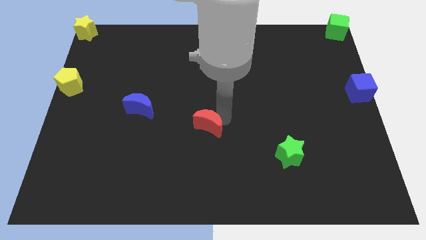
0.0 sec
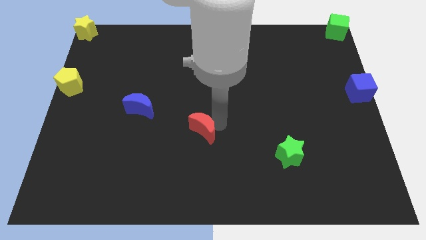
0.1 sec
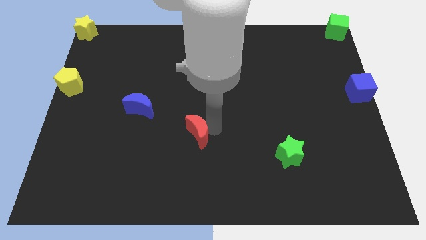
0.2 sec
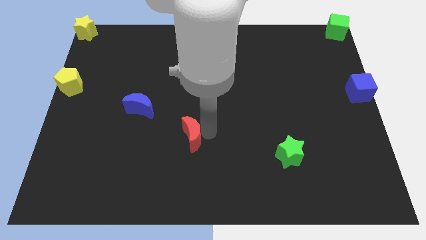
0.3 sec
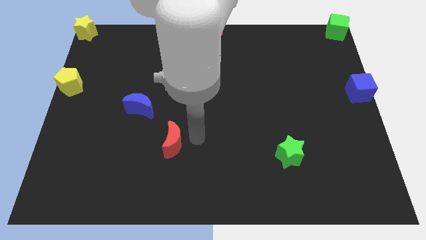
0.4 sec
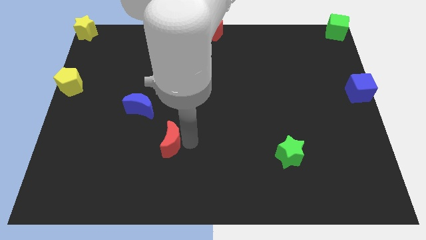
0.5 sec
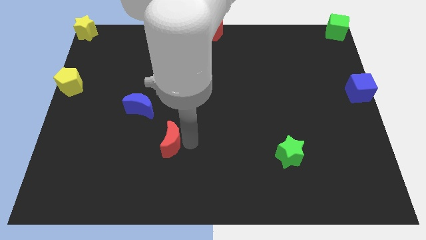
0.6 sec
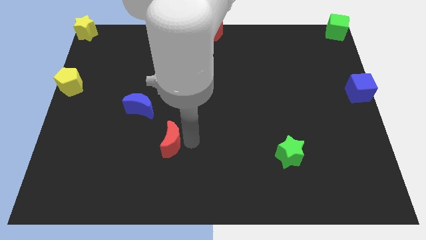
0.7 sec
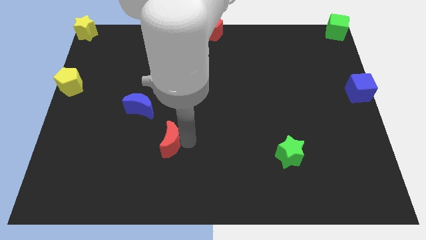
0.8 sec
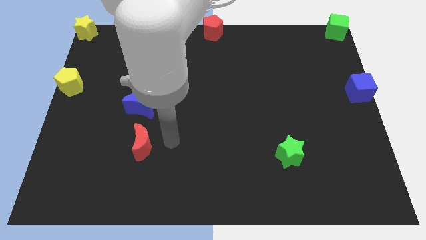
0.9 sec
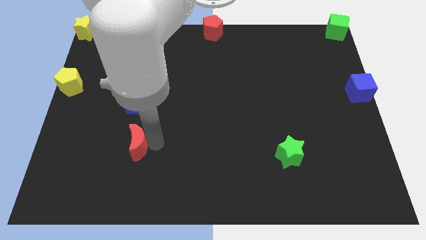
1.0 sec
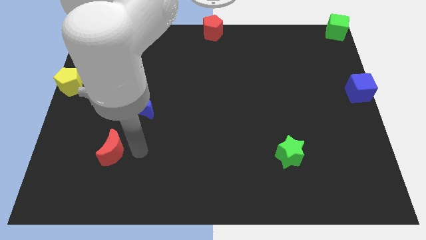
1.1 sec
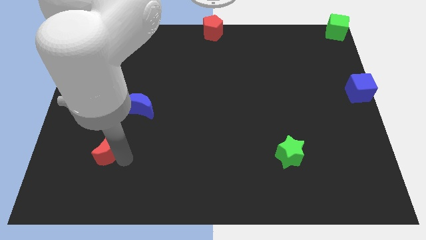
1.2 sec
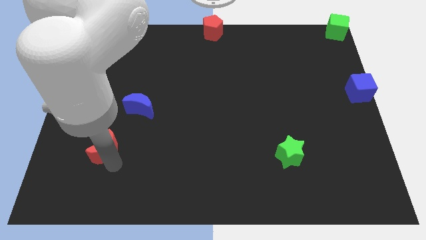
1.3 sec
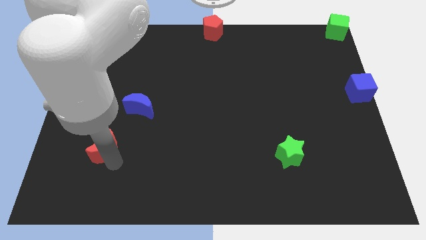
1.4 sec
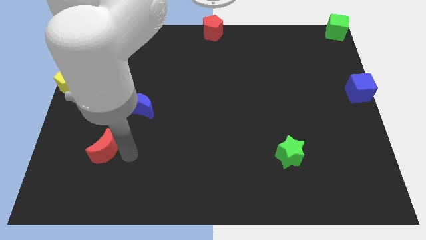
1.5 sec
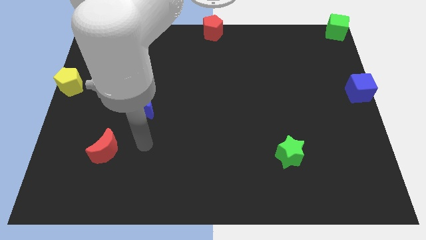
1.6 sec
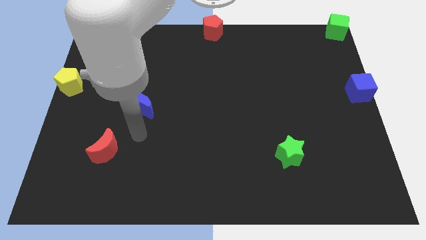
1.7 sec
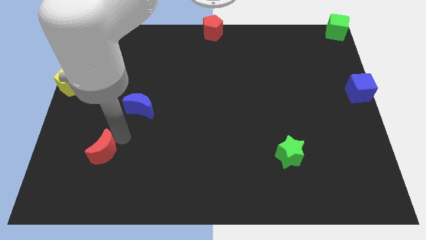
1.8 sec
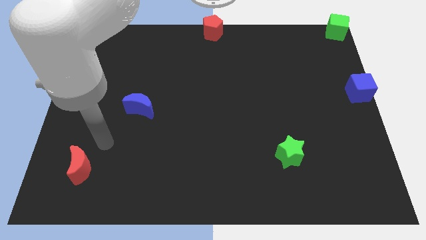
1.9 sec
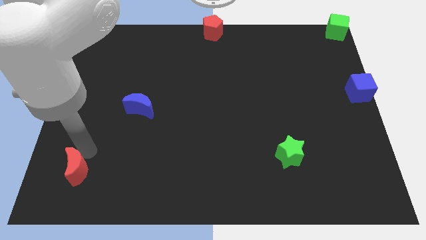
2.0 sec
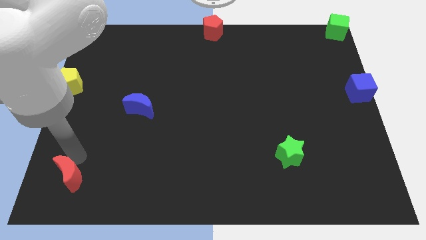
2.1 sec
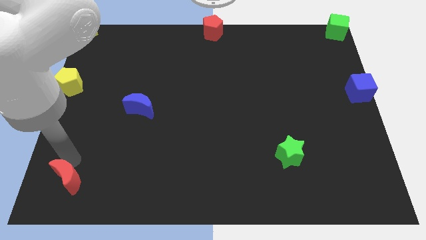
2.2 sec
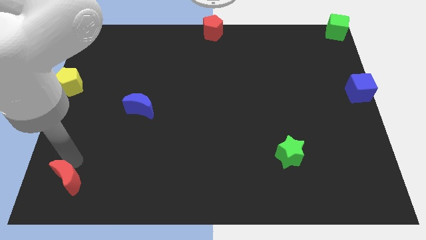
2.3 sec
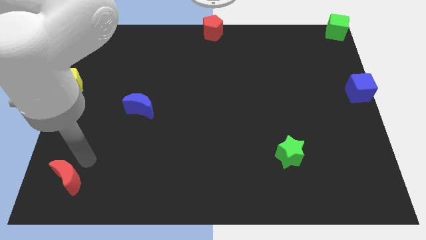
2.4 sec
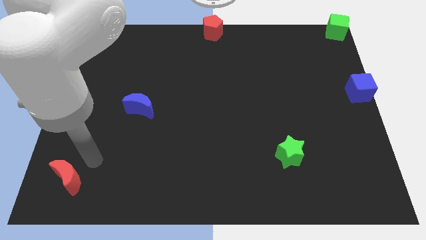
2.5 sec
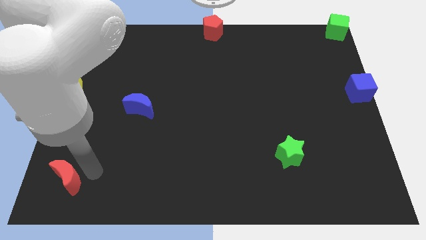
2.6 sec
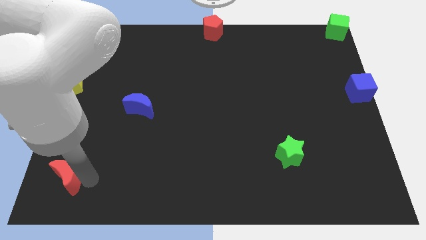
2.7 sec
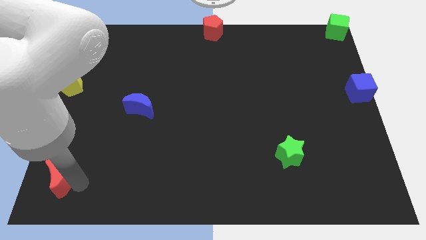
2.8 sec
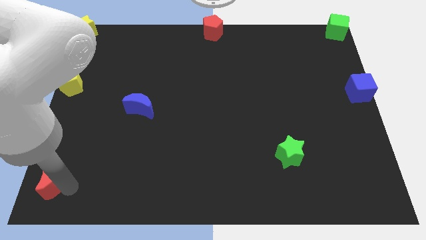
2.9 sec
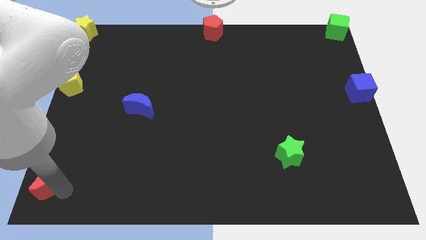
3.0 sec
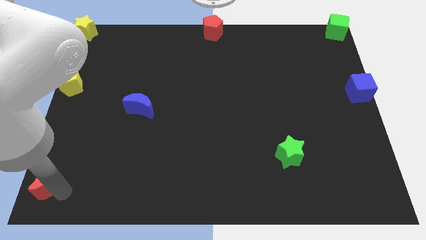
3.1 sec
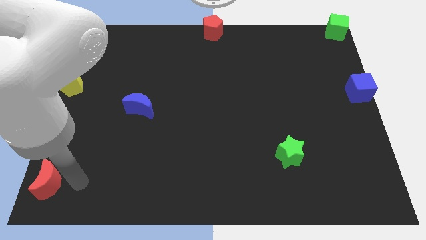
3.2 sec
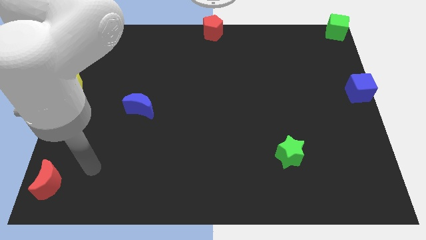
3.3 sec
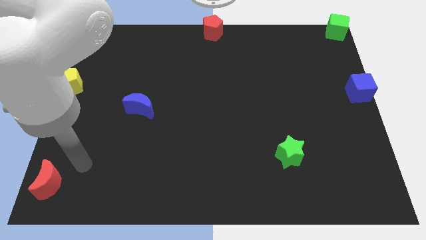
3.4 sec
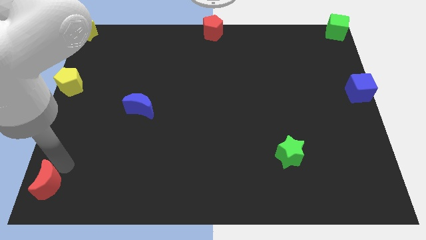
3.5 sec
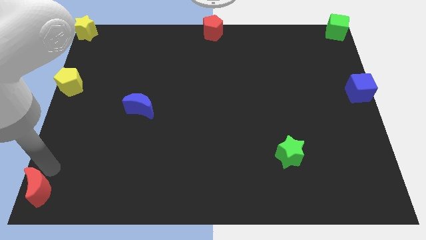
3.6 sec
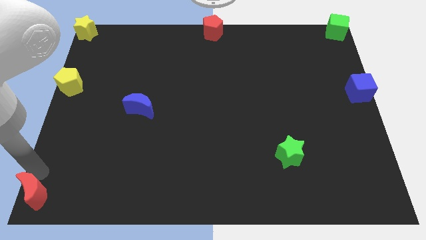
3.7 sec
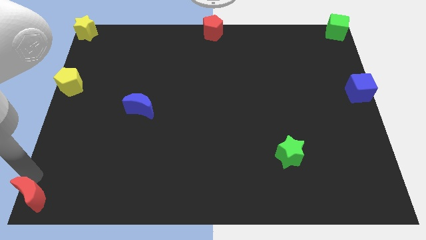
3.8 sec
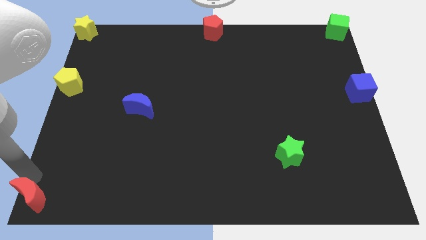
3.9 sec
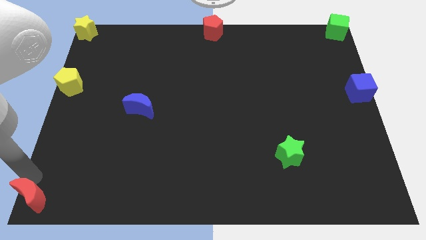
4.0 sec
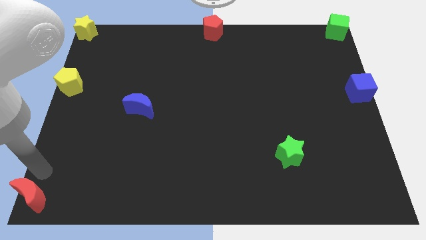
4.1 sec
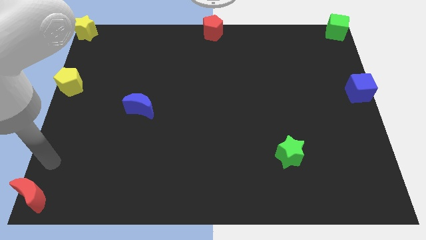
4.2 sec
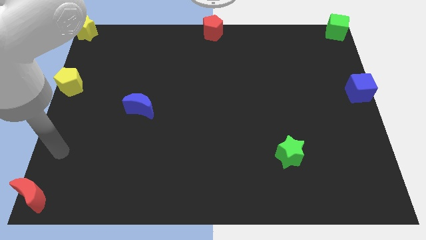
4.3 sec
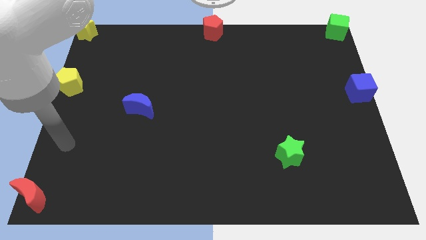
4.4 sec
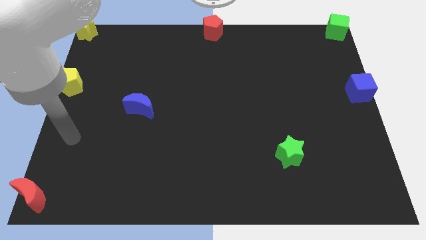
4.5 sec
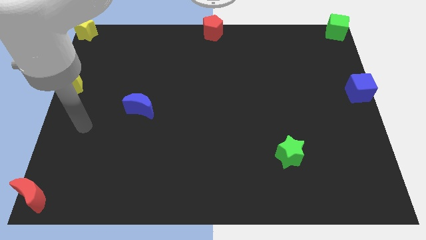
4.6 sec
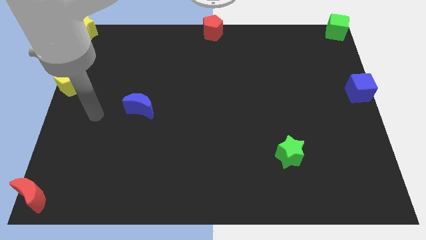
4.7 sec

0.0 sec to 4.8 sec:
slide the red moon to the bottom left corner of the board

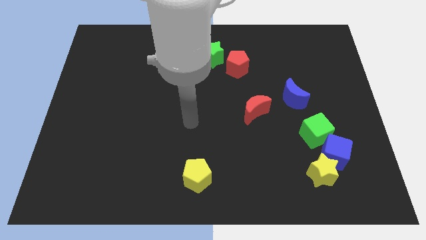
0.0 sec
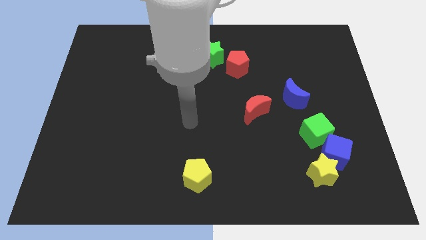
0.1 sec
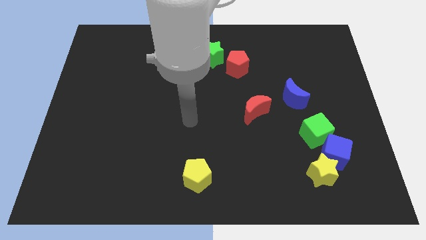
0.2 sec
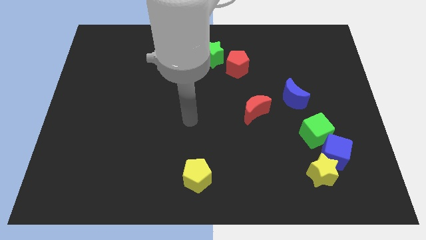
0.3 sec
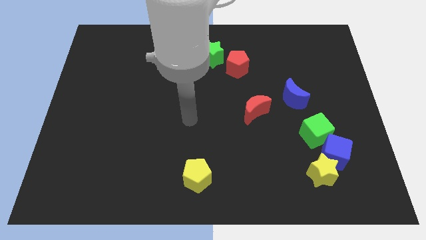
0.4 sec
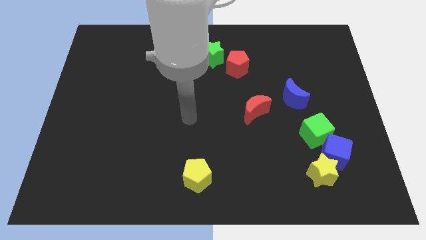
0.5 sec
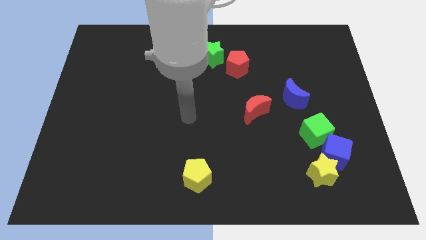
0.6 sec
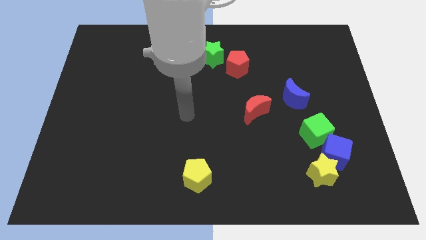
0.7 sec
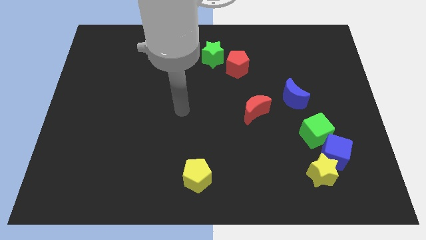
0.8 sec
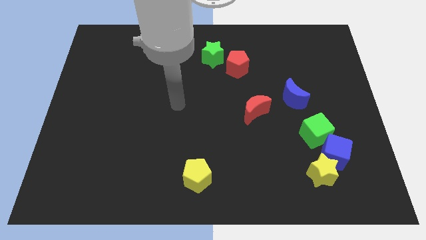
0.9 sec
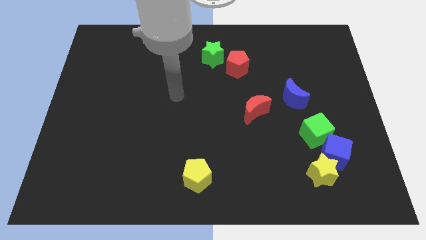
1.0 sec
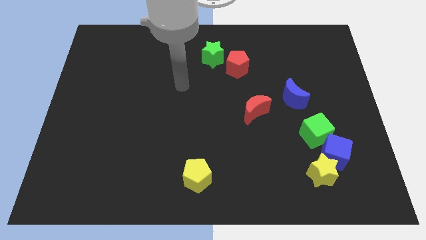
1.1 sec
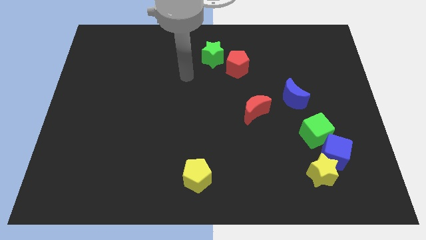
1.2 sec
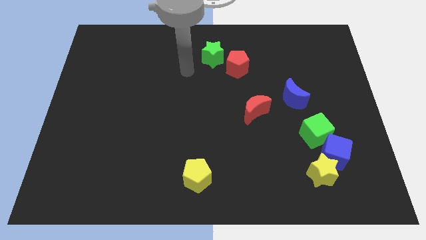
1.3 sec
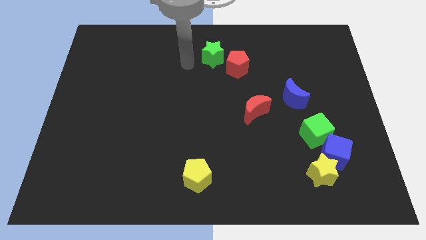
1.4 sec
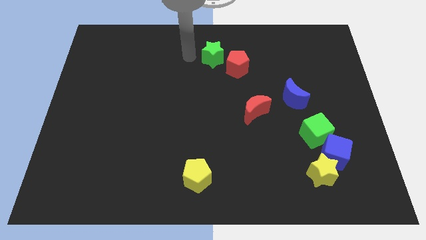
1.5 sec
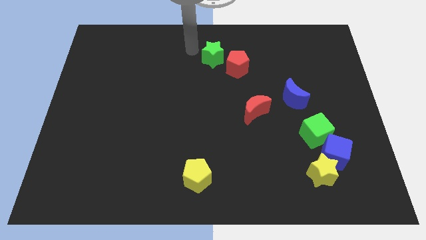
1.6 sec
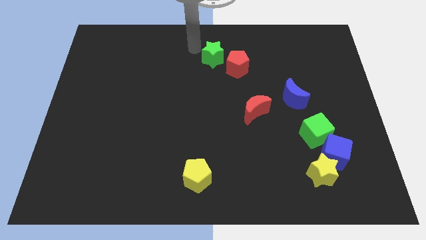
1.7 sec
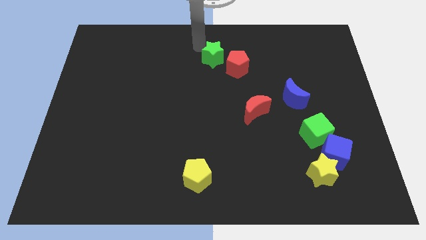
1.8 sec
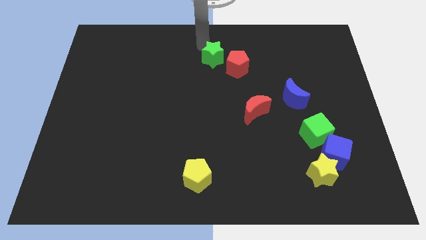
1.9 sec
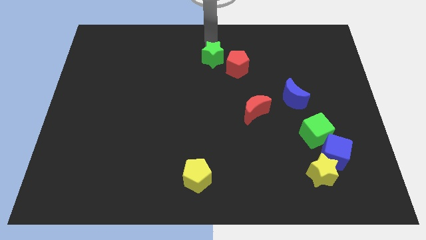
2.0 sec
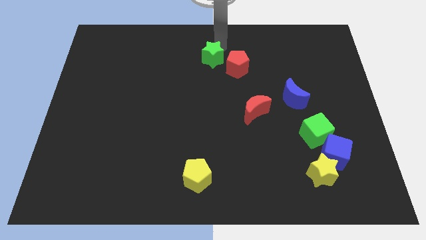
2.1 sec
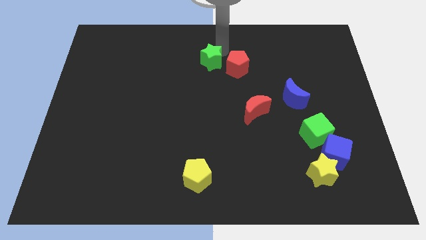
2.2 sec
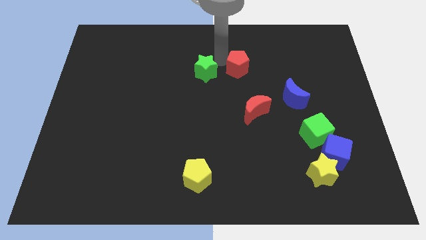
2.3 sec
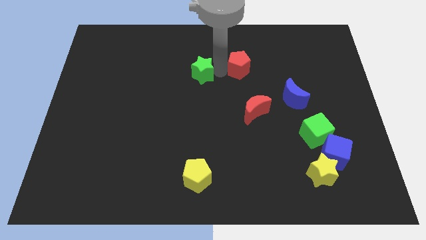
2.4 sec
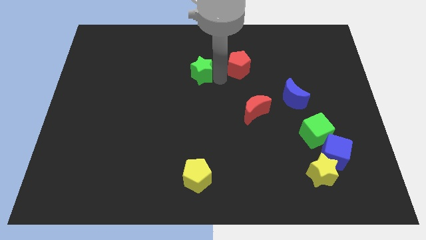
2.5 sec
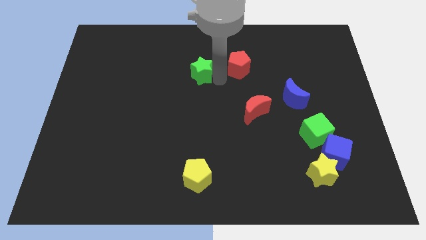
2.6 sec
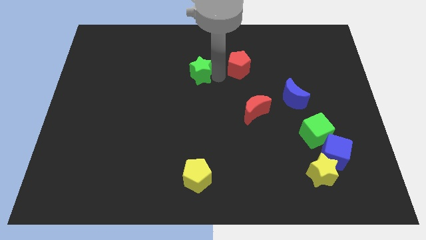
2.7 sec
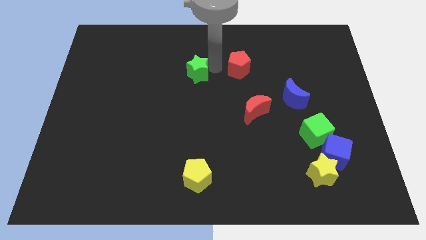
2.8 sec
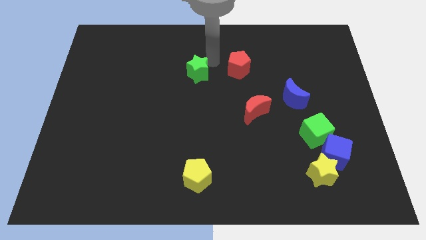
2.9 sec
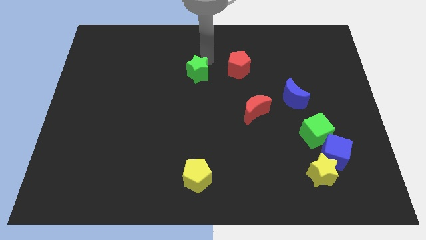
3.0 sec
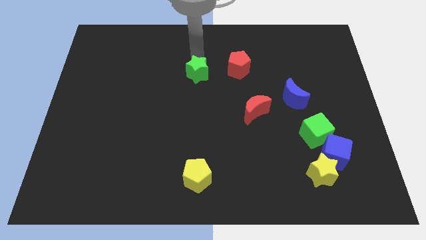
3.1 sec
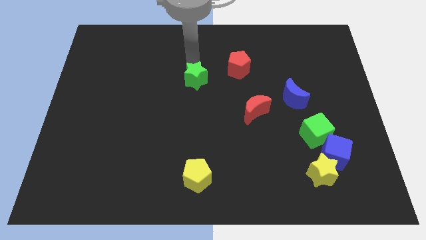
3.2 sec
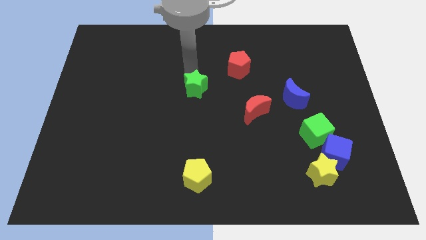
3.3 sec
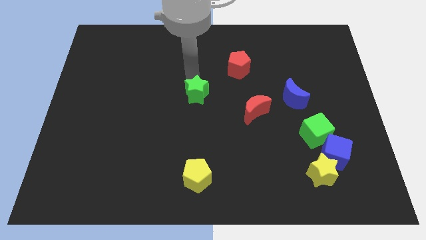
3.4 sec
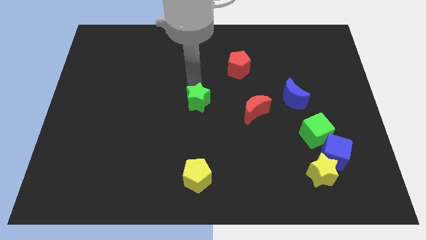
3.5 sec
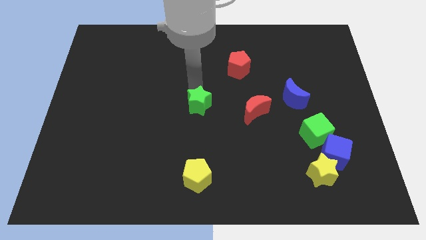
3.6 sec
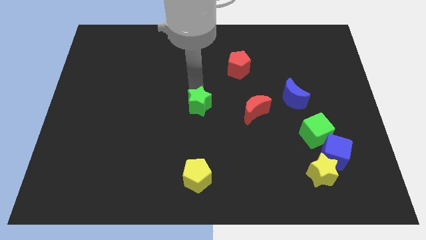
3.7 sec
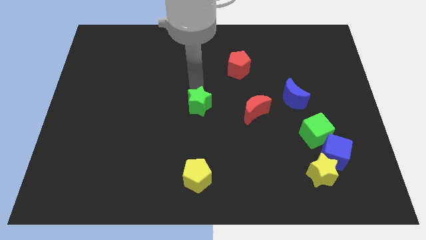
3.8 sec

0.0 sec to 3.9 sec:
move the green star towards the yellow pentagon

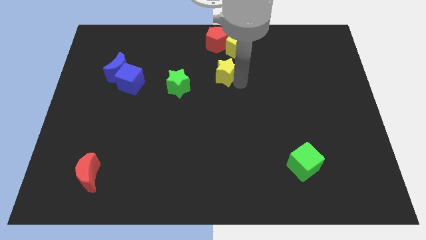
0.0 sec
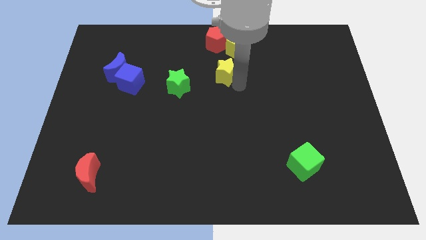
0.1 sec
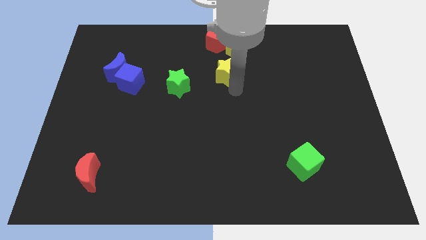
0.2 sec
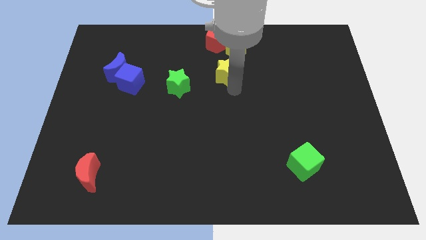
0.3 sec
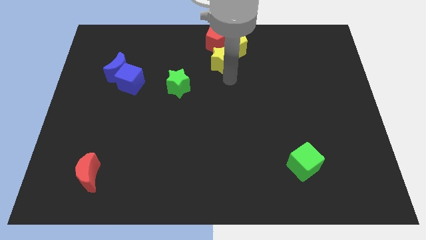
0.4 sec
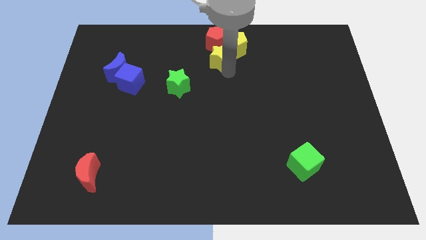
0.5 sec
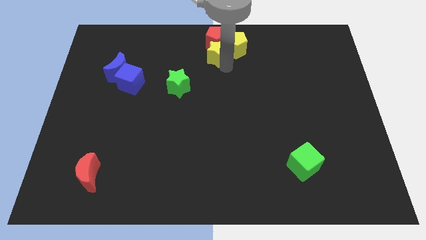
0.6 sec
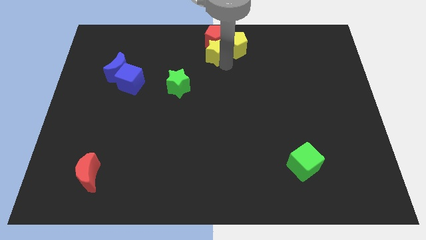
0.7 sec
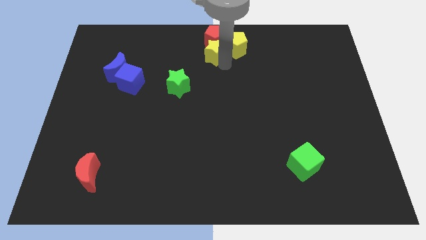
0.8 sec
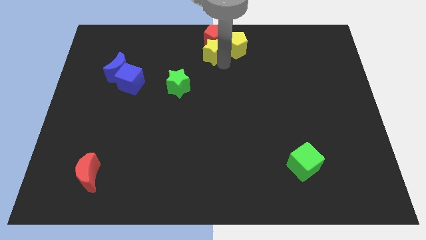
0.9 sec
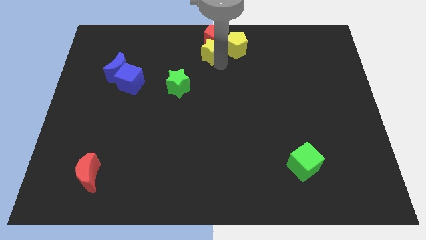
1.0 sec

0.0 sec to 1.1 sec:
put the yellow star at the bottom of the red pentagon
